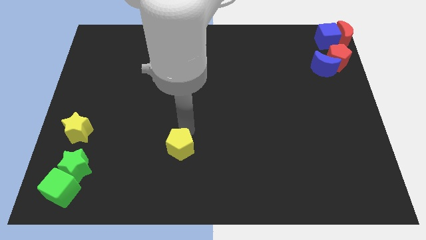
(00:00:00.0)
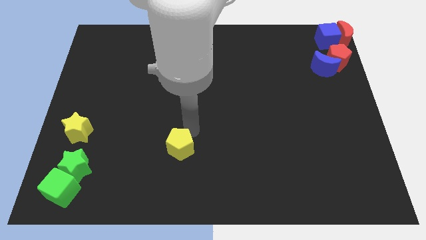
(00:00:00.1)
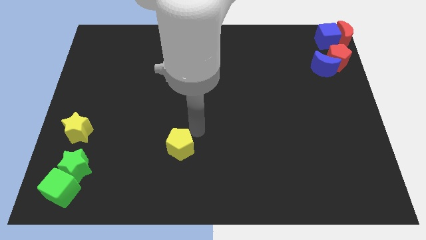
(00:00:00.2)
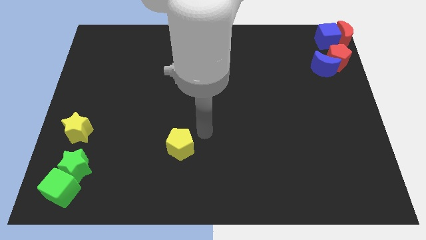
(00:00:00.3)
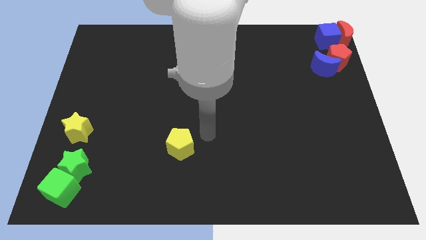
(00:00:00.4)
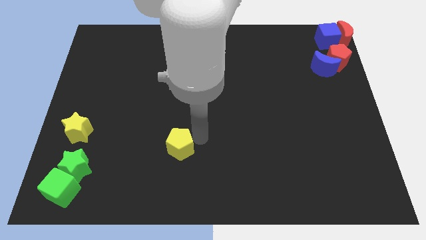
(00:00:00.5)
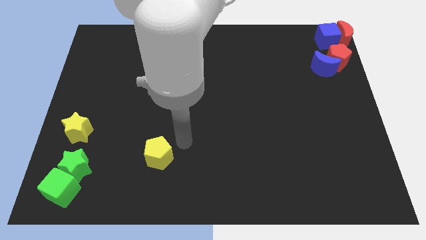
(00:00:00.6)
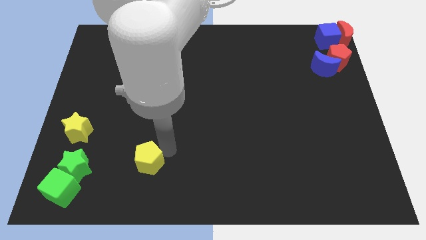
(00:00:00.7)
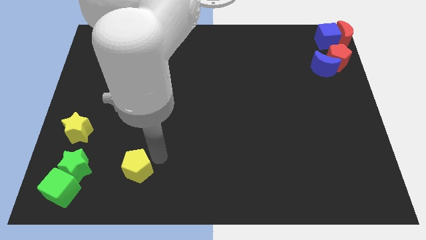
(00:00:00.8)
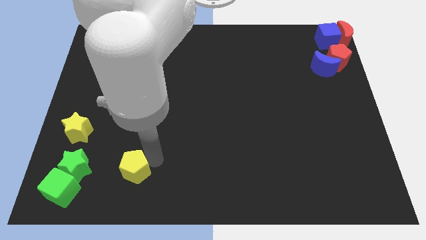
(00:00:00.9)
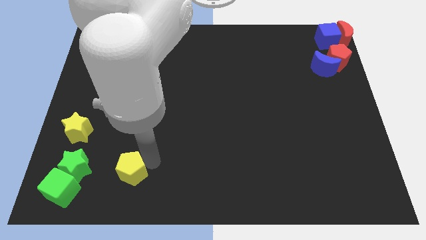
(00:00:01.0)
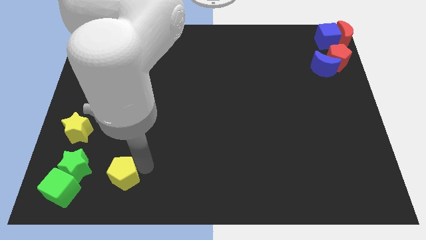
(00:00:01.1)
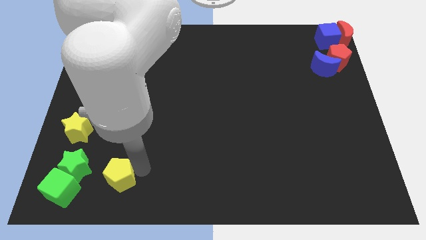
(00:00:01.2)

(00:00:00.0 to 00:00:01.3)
push the yellow pentagon towards the right of the green cubes

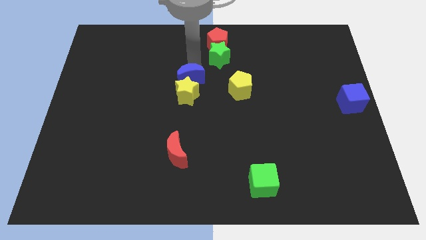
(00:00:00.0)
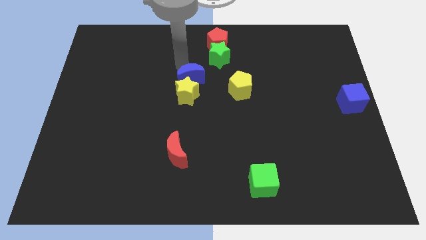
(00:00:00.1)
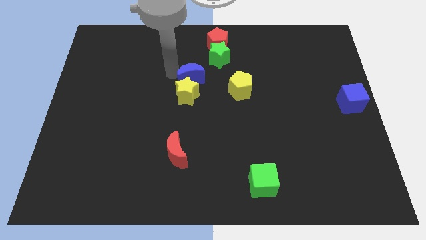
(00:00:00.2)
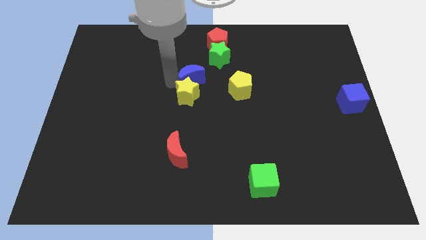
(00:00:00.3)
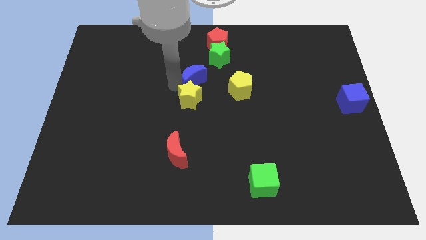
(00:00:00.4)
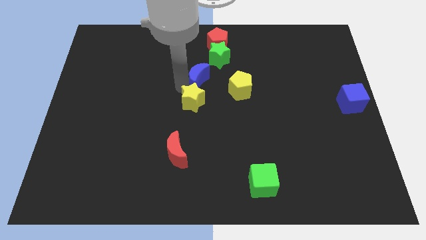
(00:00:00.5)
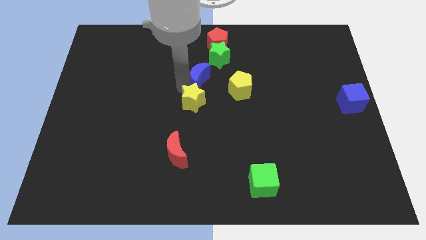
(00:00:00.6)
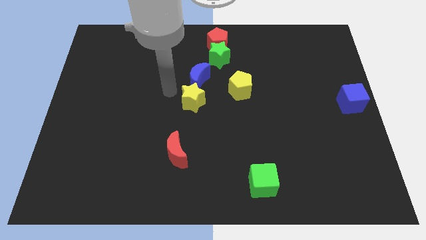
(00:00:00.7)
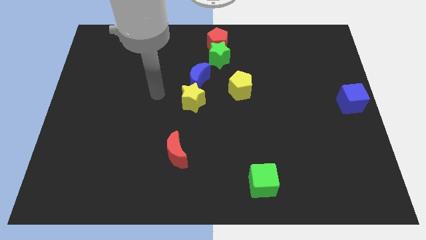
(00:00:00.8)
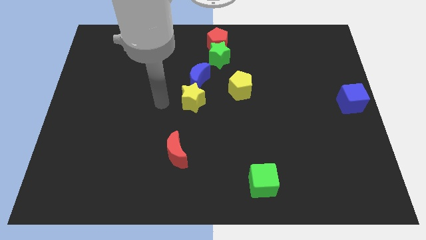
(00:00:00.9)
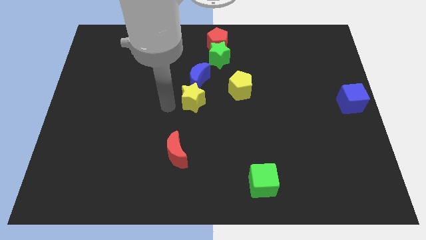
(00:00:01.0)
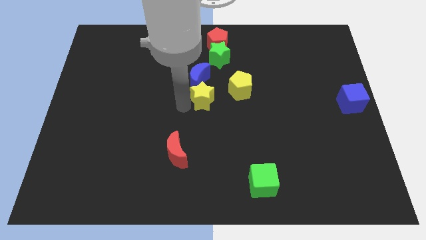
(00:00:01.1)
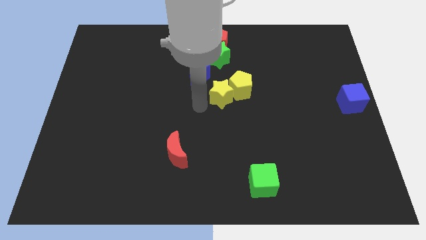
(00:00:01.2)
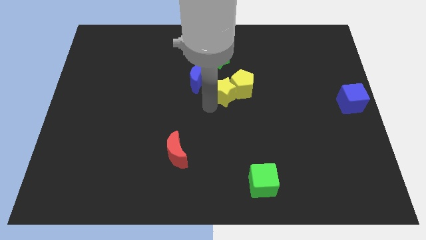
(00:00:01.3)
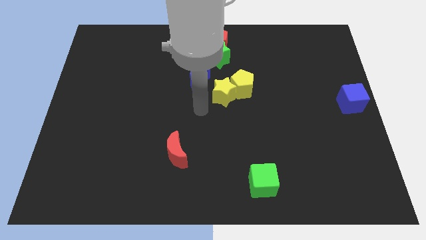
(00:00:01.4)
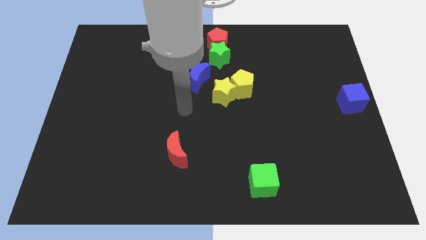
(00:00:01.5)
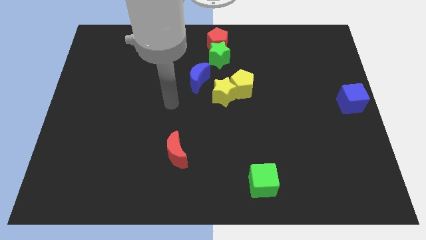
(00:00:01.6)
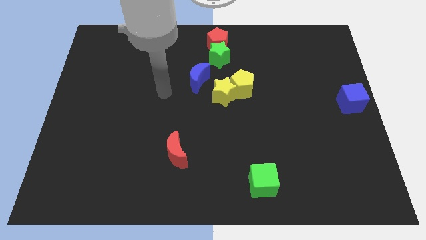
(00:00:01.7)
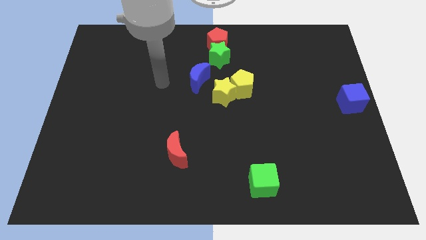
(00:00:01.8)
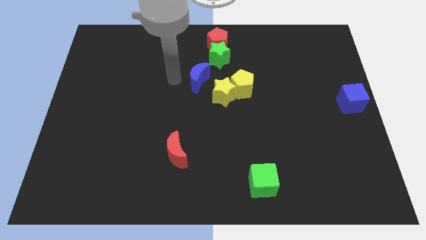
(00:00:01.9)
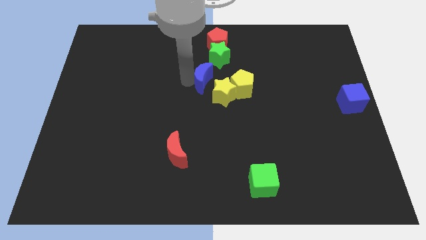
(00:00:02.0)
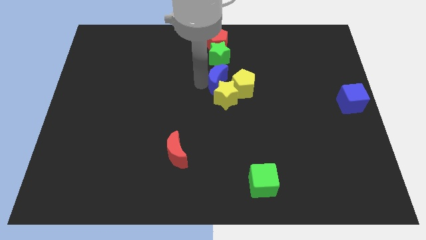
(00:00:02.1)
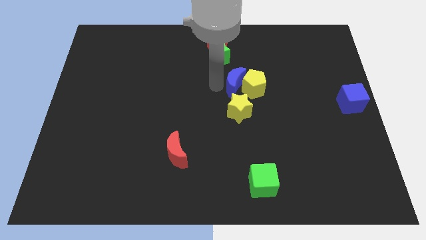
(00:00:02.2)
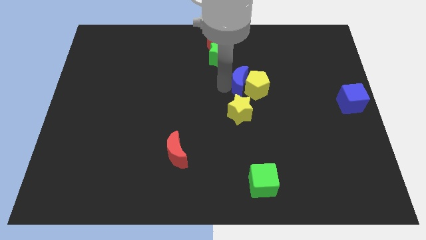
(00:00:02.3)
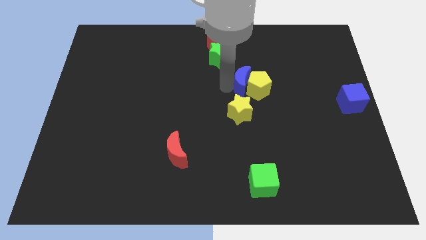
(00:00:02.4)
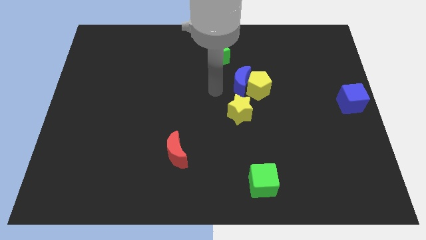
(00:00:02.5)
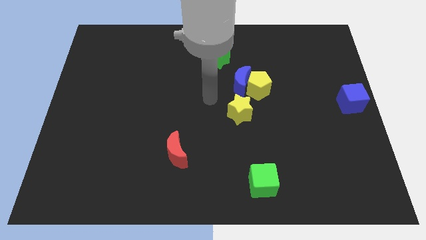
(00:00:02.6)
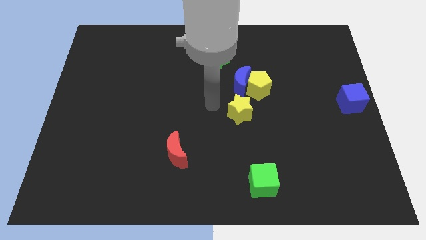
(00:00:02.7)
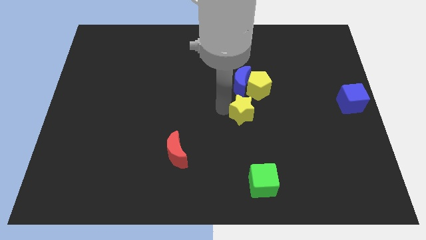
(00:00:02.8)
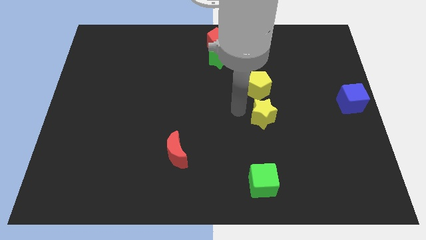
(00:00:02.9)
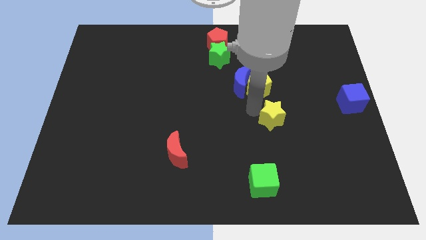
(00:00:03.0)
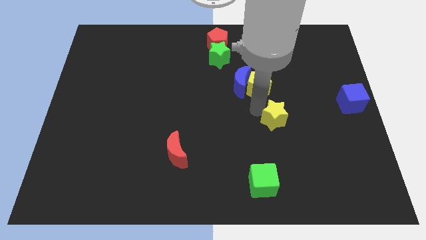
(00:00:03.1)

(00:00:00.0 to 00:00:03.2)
push blue cube left to yellow pentagon

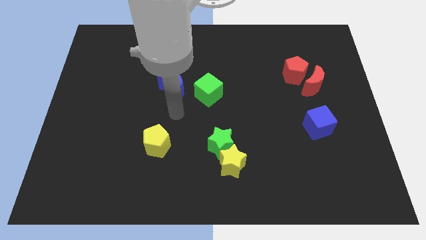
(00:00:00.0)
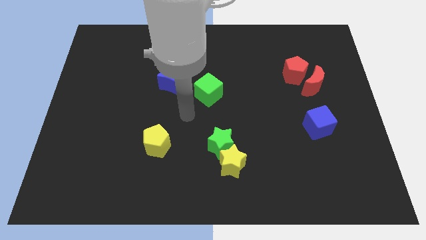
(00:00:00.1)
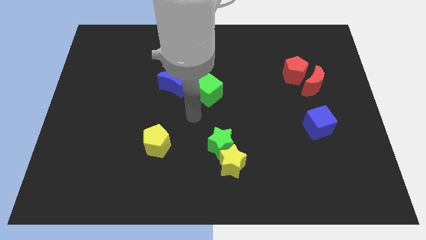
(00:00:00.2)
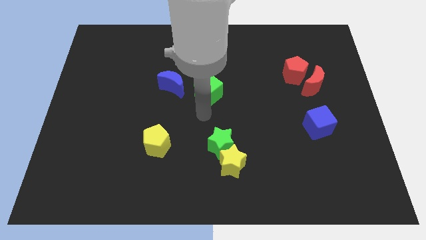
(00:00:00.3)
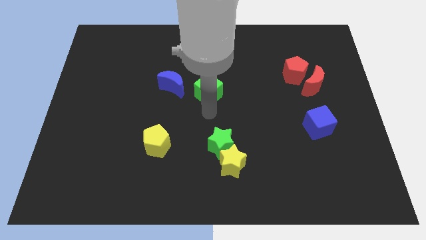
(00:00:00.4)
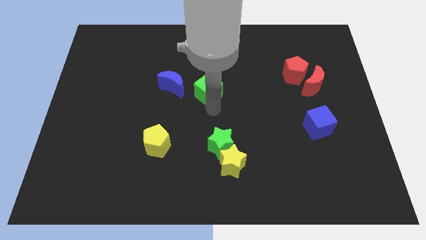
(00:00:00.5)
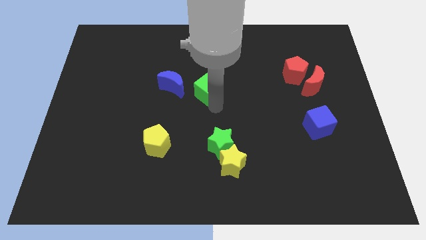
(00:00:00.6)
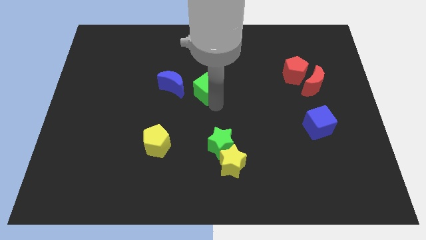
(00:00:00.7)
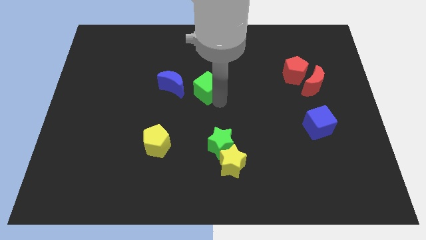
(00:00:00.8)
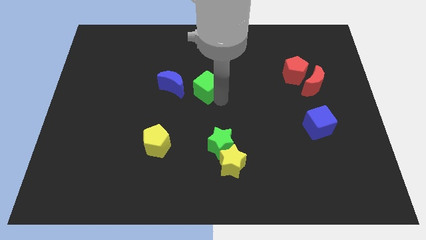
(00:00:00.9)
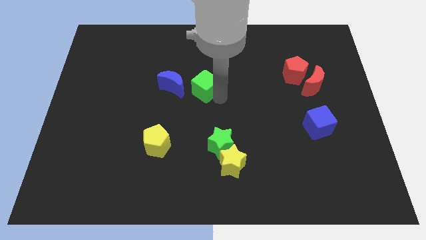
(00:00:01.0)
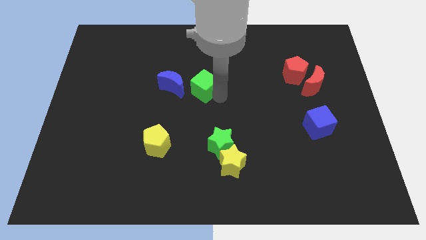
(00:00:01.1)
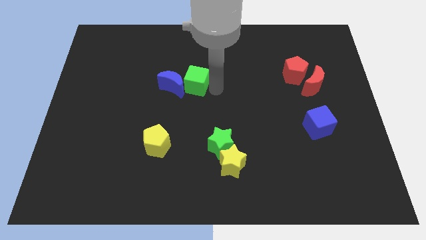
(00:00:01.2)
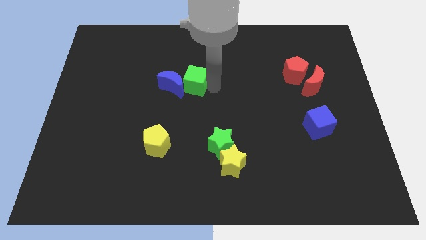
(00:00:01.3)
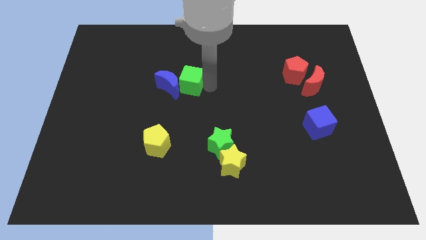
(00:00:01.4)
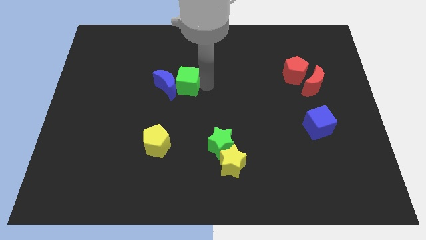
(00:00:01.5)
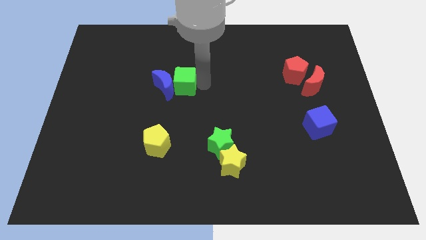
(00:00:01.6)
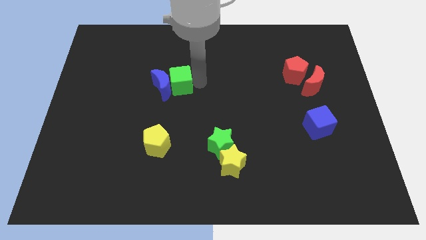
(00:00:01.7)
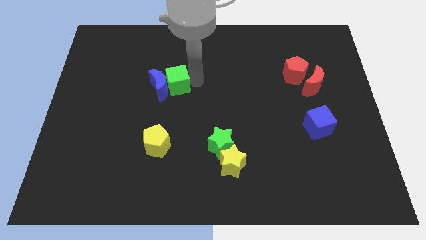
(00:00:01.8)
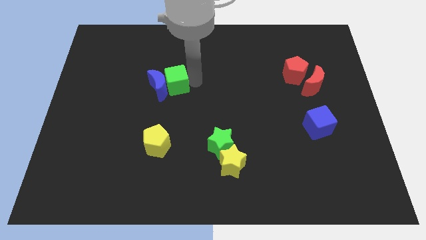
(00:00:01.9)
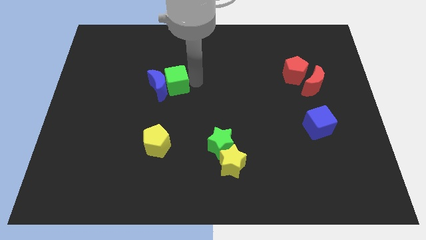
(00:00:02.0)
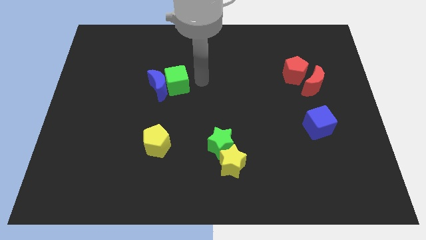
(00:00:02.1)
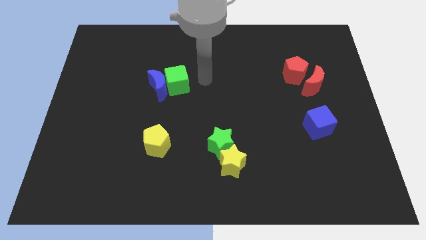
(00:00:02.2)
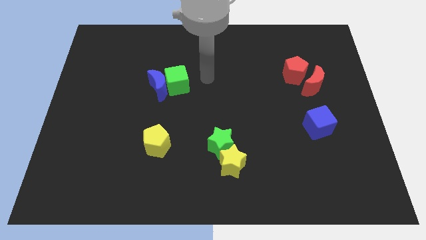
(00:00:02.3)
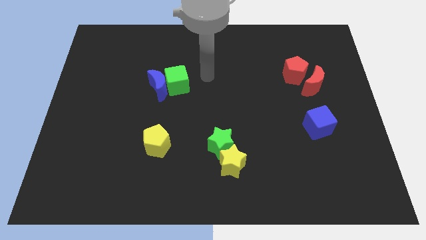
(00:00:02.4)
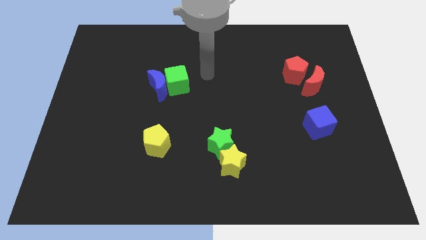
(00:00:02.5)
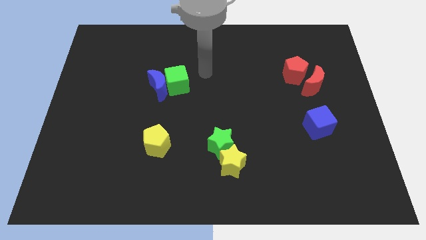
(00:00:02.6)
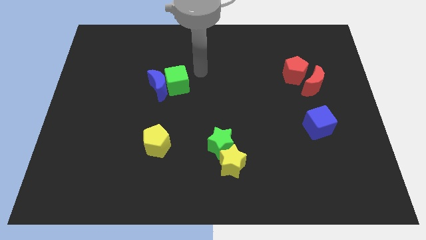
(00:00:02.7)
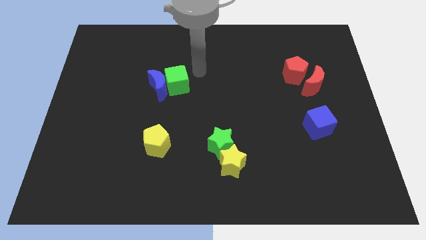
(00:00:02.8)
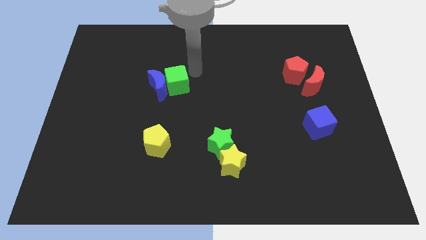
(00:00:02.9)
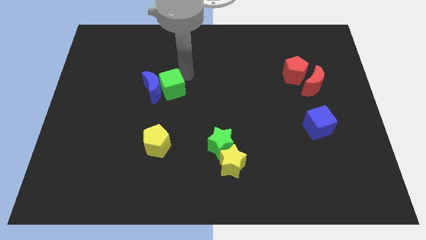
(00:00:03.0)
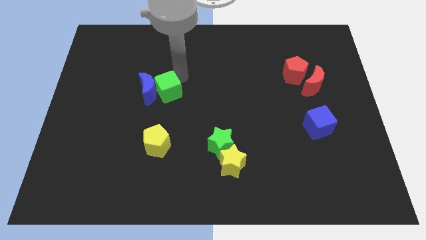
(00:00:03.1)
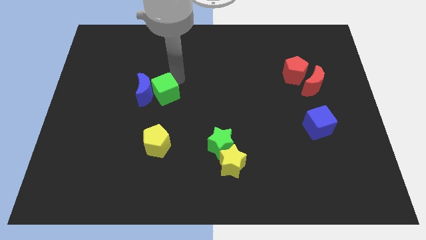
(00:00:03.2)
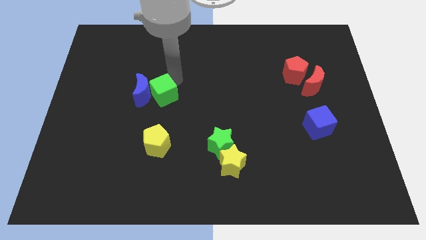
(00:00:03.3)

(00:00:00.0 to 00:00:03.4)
move the green cube close to the blue moon

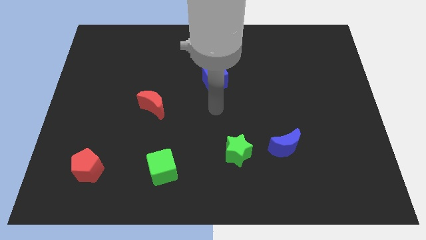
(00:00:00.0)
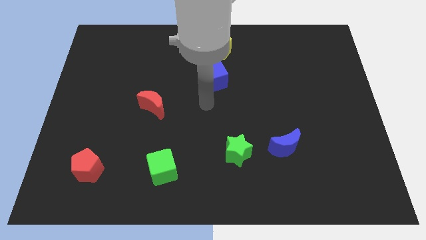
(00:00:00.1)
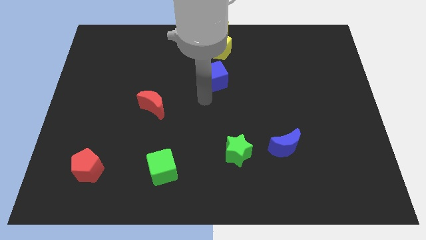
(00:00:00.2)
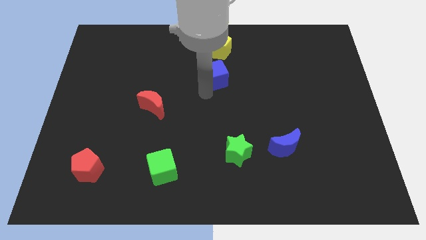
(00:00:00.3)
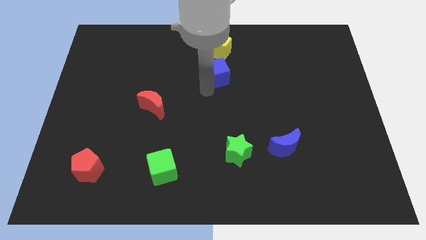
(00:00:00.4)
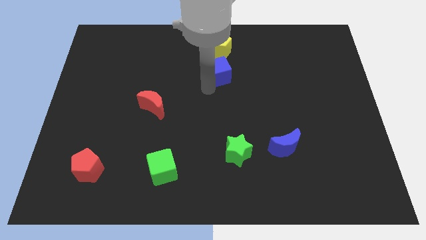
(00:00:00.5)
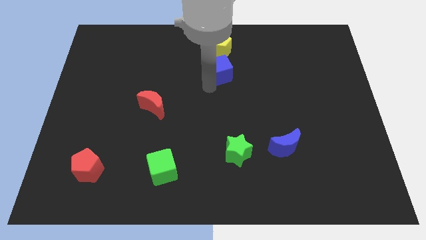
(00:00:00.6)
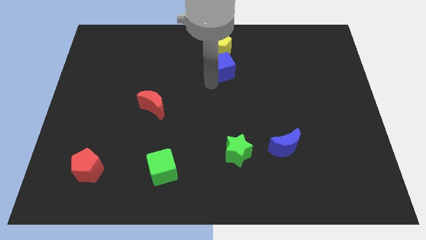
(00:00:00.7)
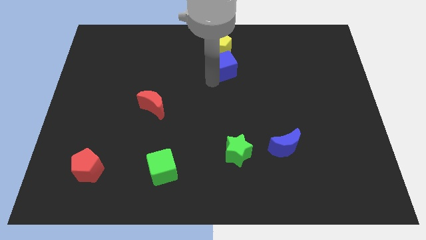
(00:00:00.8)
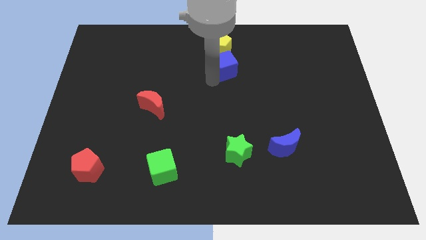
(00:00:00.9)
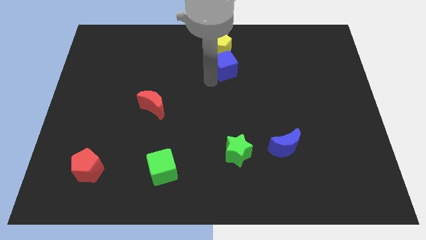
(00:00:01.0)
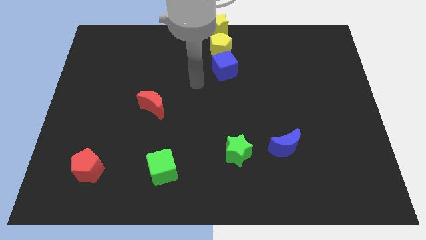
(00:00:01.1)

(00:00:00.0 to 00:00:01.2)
slide the blue moon into the yellow pentagon
